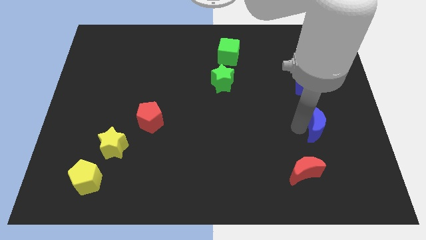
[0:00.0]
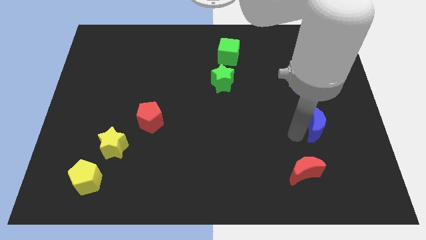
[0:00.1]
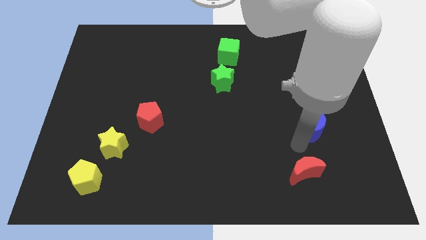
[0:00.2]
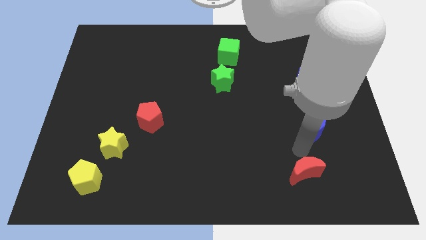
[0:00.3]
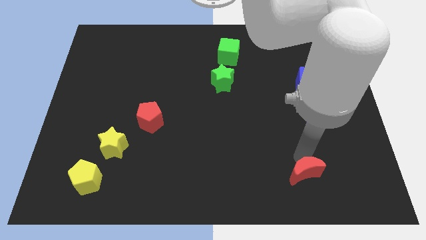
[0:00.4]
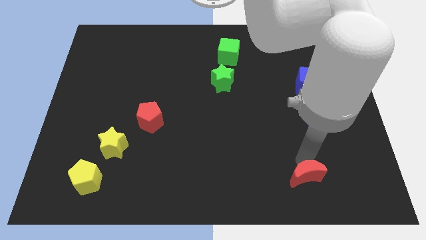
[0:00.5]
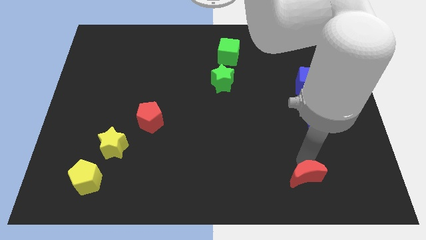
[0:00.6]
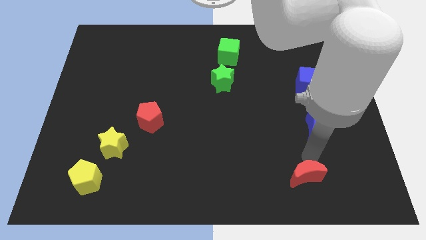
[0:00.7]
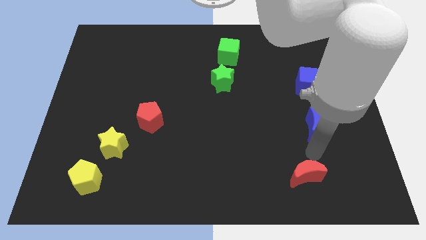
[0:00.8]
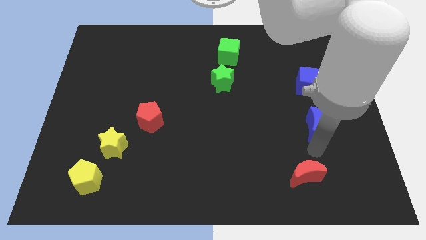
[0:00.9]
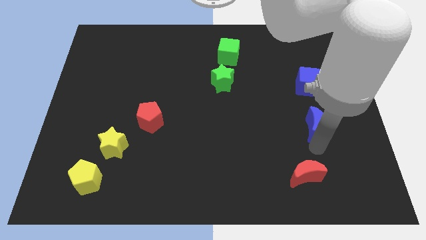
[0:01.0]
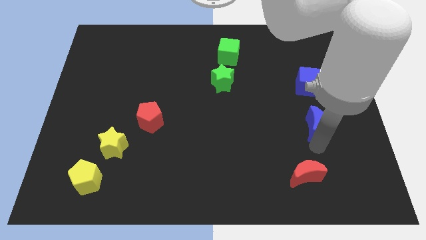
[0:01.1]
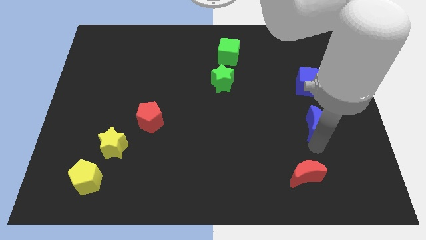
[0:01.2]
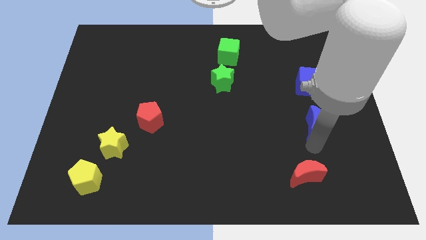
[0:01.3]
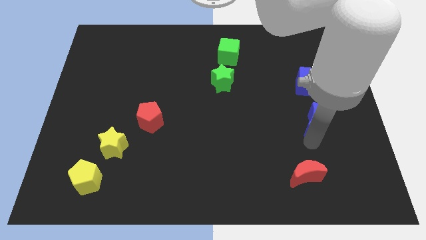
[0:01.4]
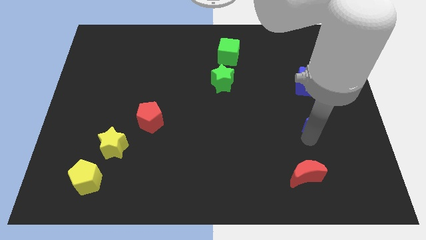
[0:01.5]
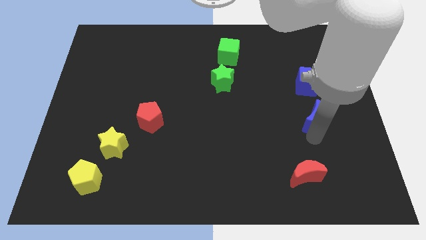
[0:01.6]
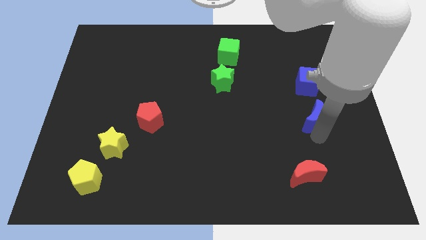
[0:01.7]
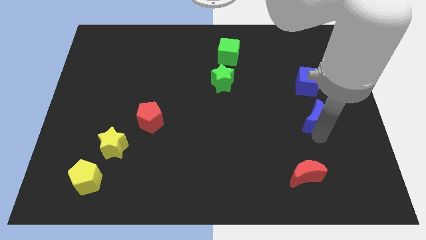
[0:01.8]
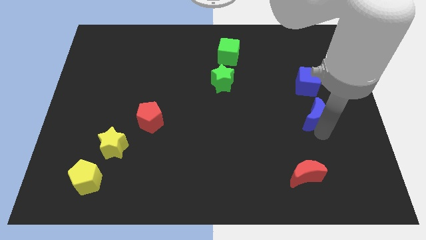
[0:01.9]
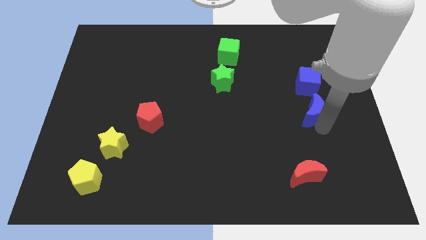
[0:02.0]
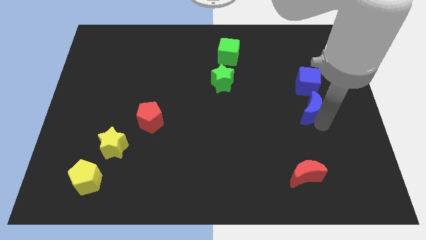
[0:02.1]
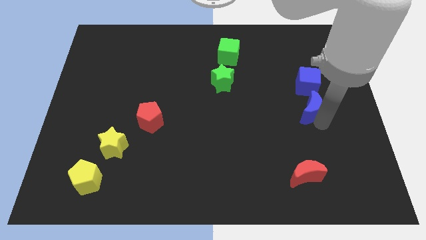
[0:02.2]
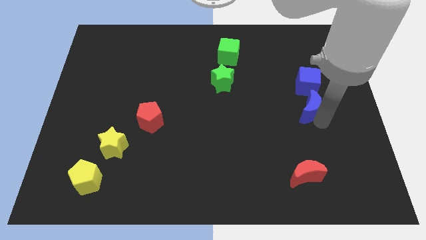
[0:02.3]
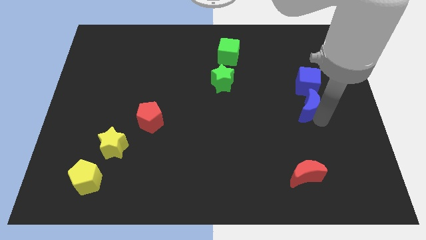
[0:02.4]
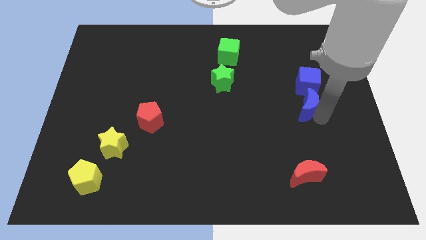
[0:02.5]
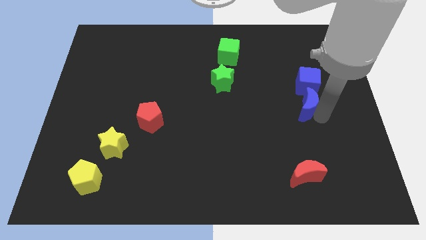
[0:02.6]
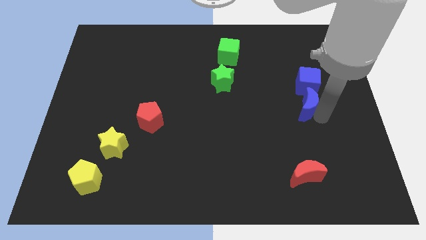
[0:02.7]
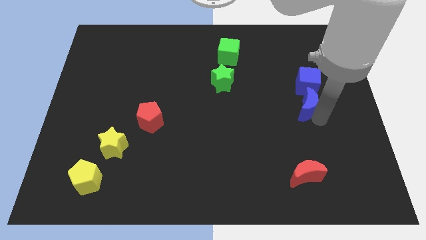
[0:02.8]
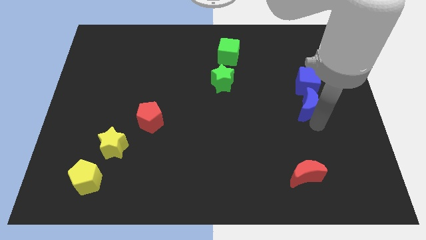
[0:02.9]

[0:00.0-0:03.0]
place blue moon at the bottom of blue cube

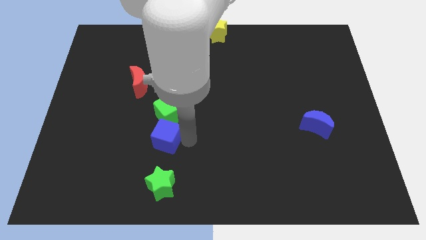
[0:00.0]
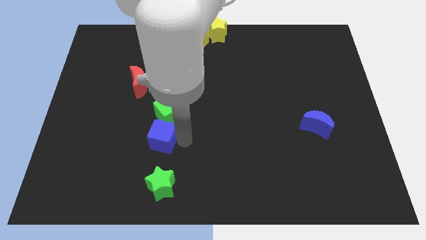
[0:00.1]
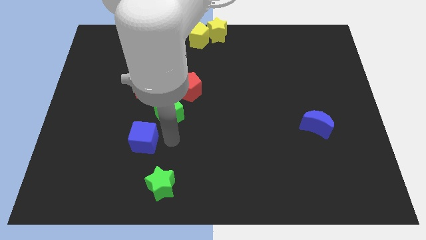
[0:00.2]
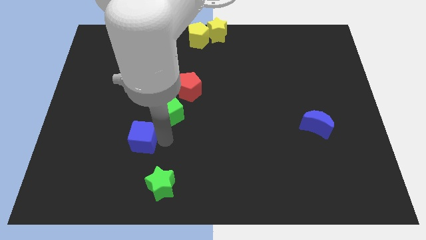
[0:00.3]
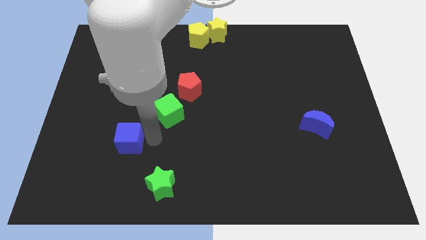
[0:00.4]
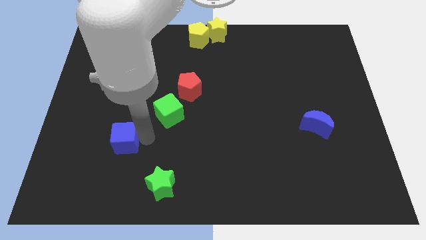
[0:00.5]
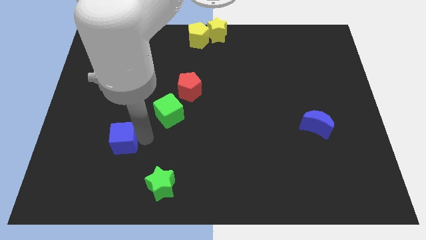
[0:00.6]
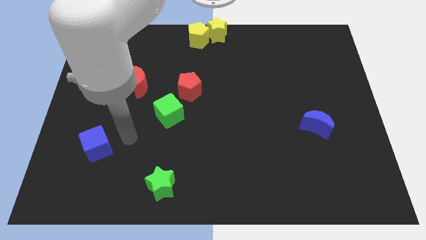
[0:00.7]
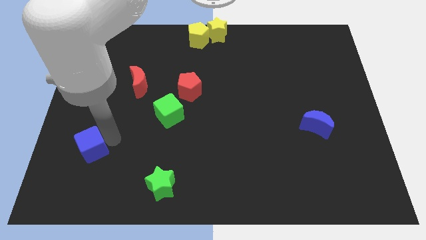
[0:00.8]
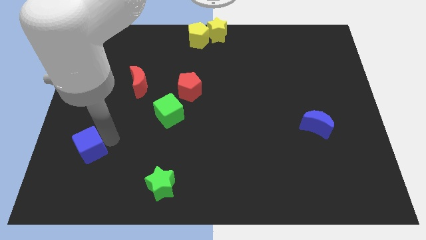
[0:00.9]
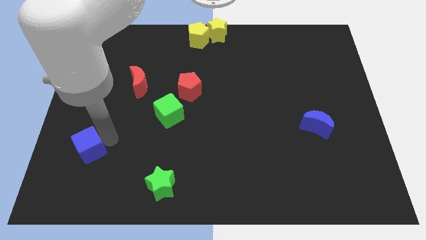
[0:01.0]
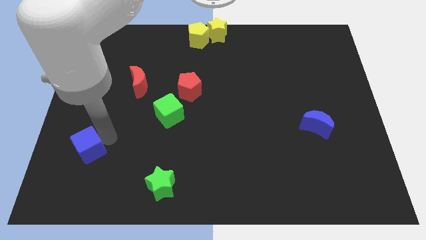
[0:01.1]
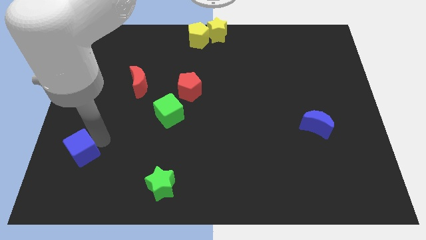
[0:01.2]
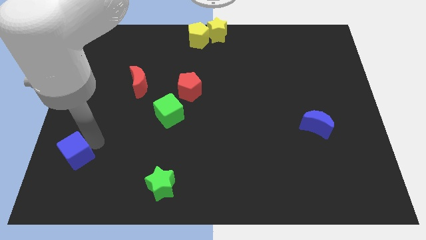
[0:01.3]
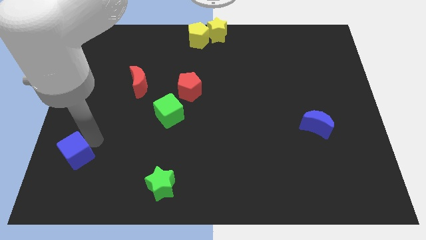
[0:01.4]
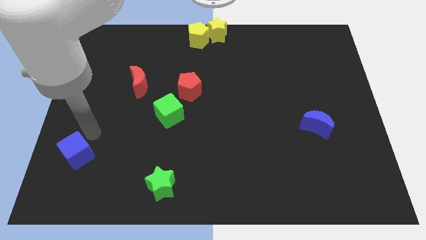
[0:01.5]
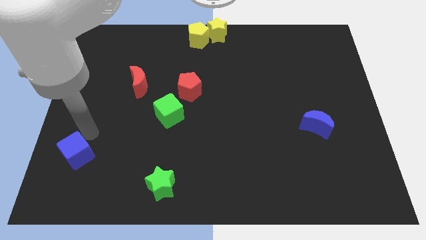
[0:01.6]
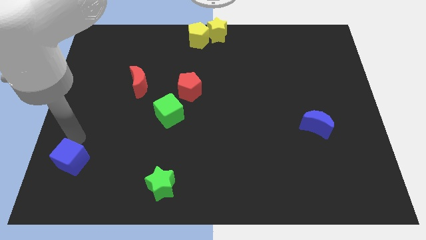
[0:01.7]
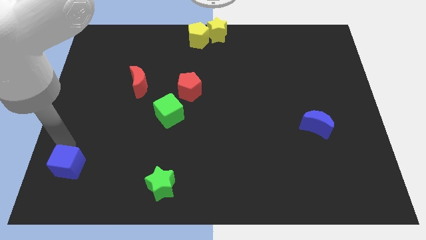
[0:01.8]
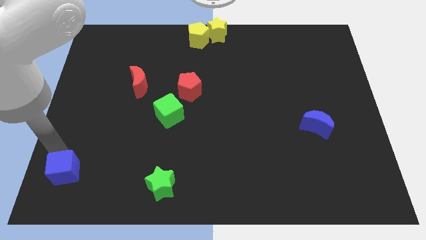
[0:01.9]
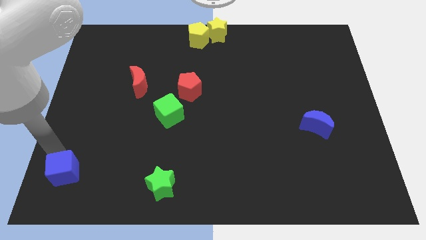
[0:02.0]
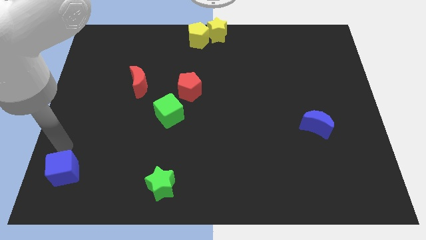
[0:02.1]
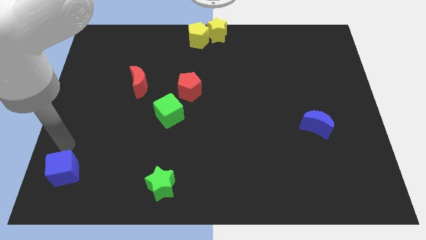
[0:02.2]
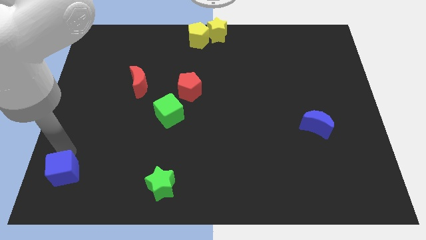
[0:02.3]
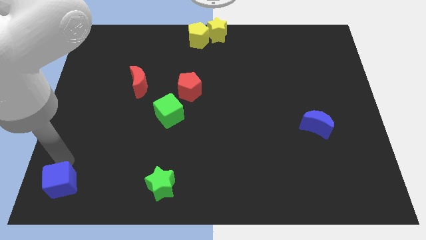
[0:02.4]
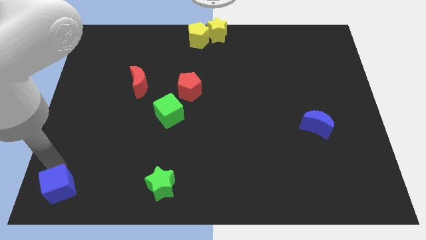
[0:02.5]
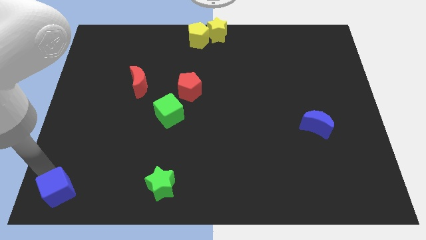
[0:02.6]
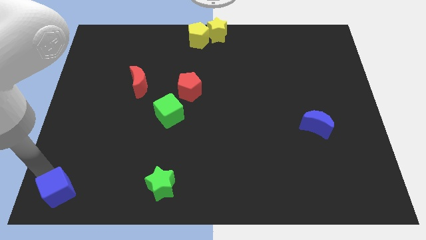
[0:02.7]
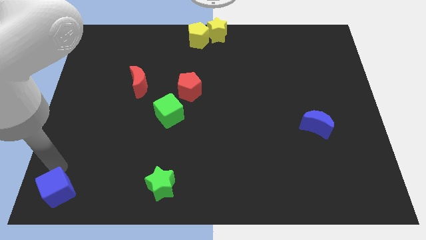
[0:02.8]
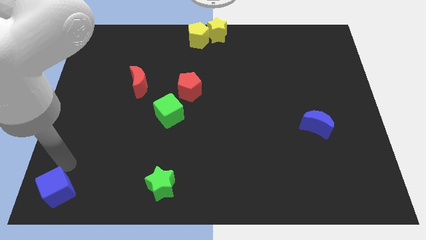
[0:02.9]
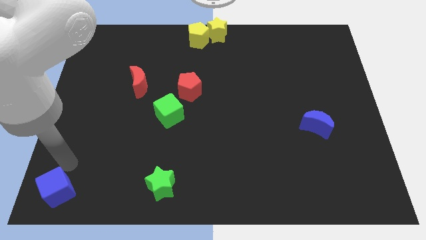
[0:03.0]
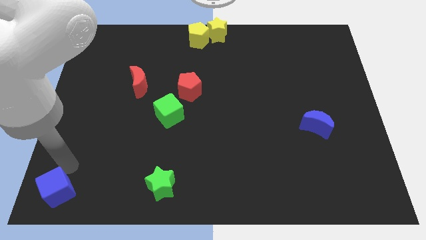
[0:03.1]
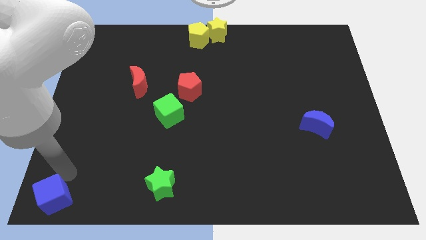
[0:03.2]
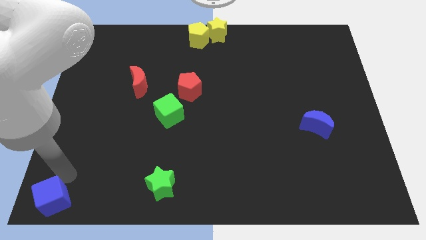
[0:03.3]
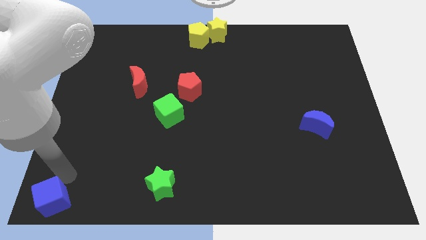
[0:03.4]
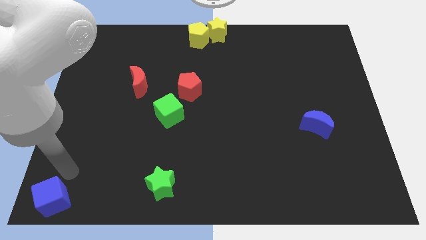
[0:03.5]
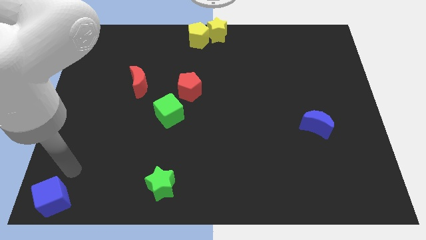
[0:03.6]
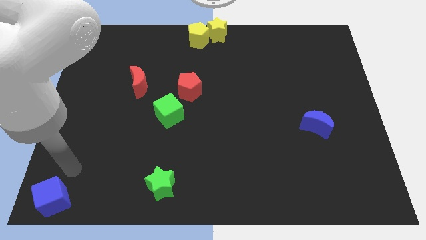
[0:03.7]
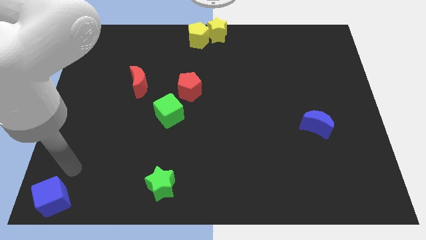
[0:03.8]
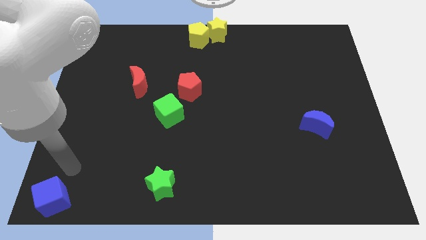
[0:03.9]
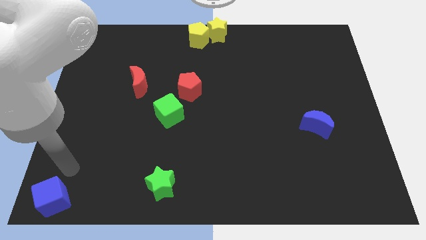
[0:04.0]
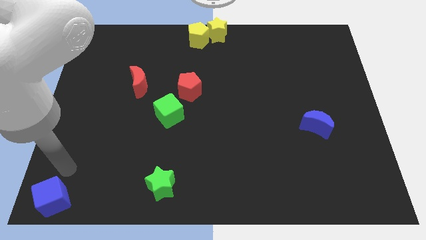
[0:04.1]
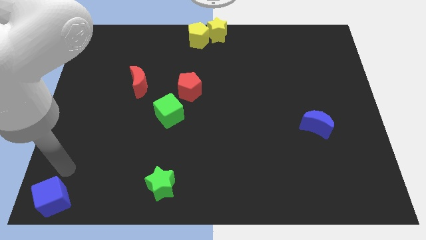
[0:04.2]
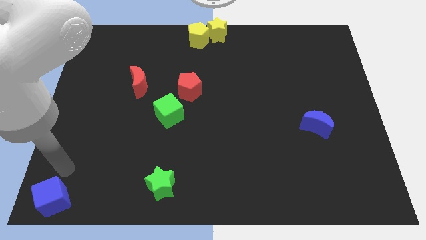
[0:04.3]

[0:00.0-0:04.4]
move blue cube toward the bottom left corner

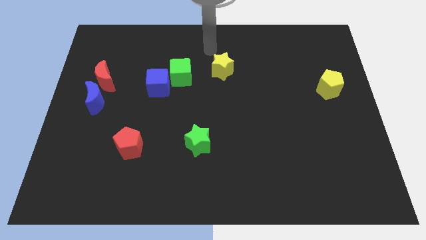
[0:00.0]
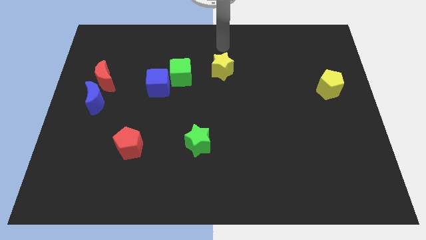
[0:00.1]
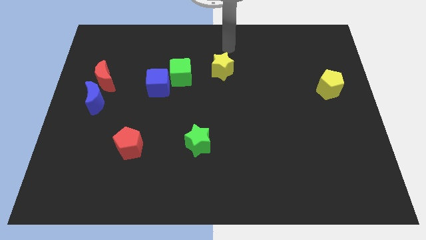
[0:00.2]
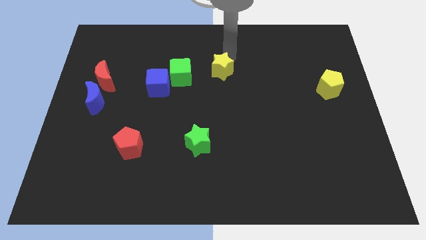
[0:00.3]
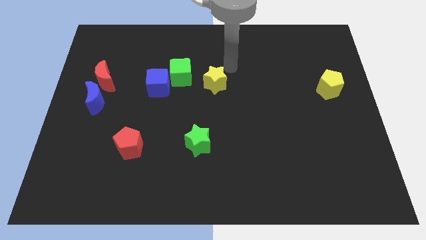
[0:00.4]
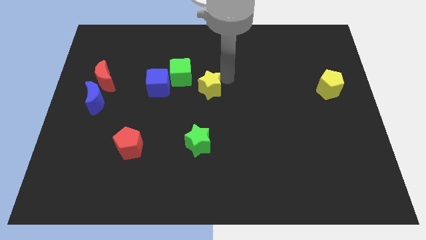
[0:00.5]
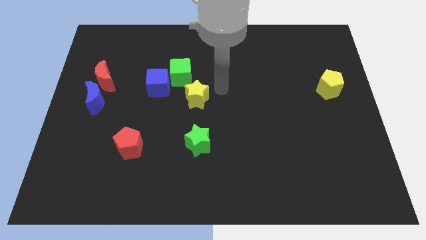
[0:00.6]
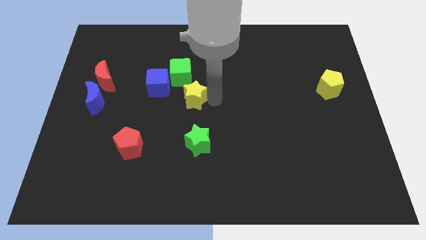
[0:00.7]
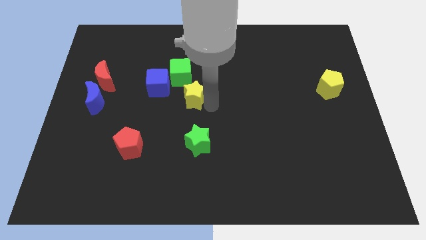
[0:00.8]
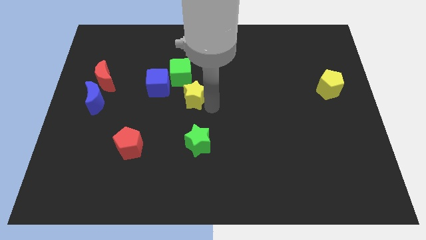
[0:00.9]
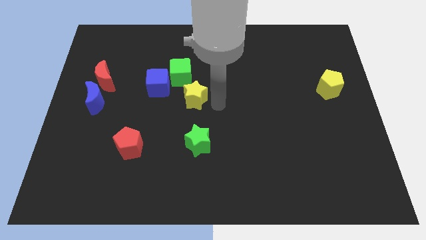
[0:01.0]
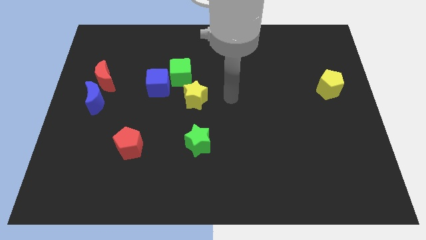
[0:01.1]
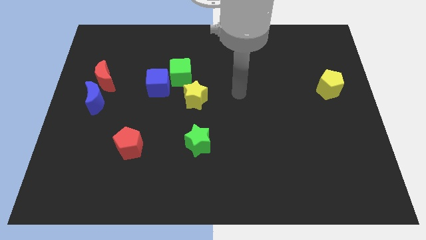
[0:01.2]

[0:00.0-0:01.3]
place the yellow star towards the bottom right side of the green cube

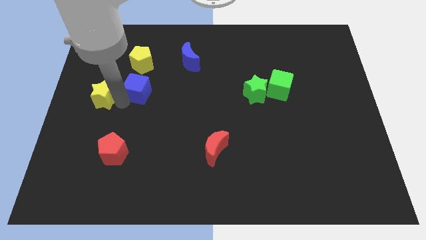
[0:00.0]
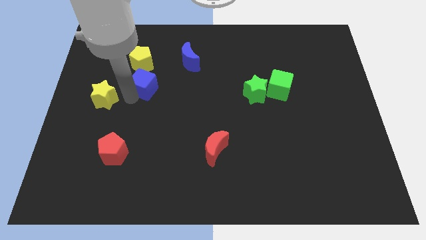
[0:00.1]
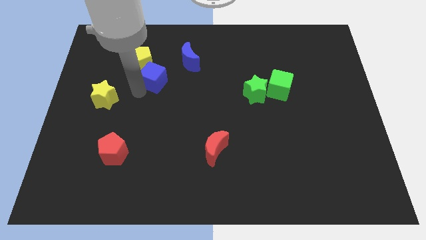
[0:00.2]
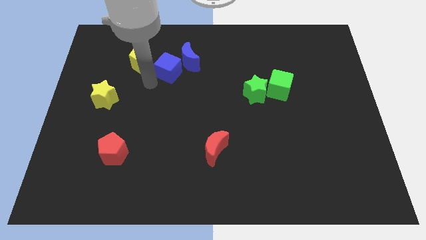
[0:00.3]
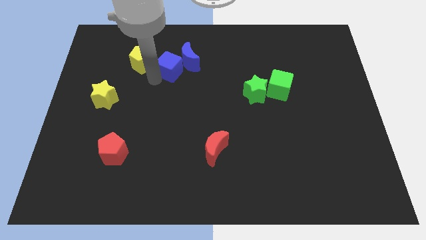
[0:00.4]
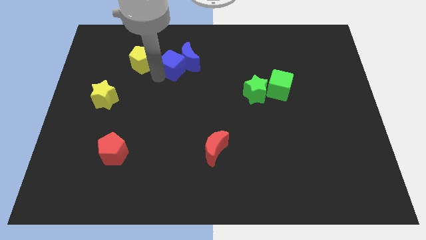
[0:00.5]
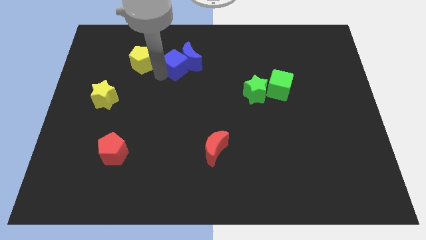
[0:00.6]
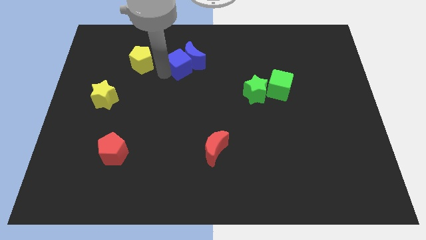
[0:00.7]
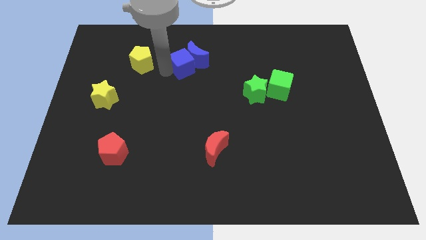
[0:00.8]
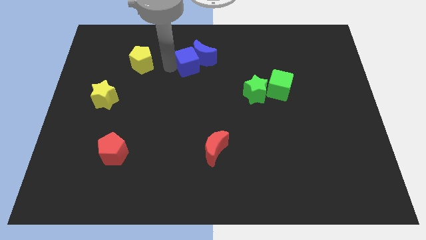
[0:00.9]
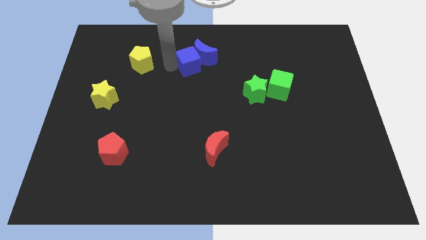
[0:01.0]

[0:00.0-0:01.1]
push the blue cube into the blue crescent
